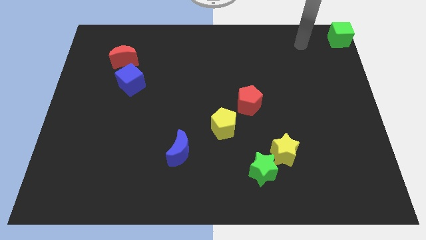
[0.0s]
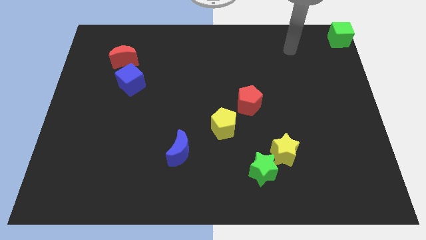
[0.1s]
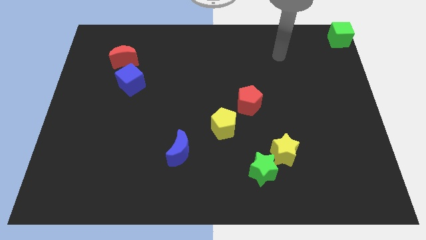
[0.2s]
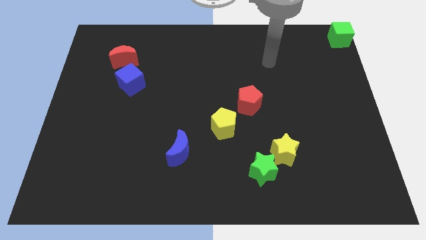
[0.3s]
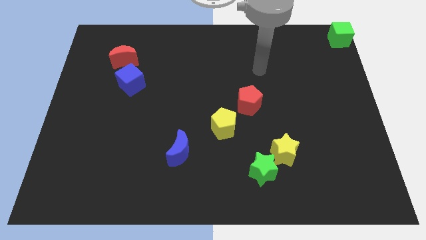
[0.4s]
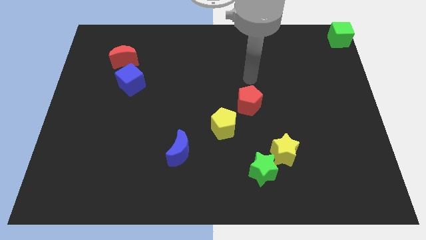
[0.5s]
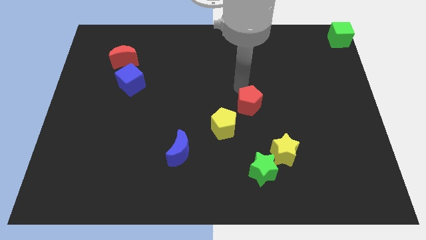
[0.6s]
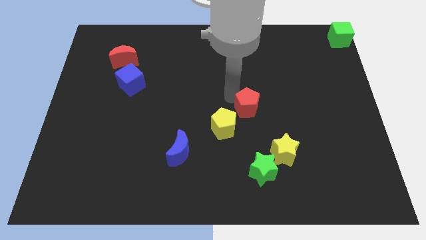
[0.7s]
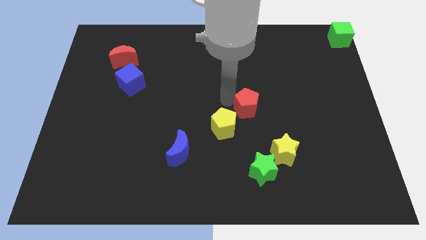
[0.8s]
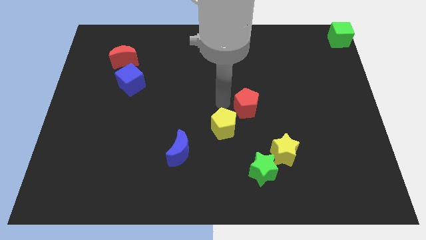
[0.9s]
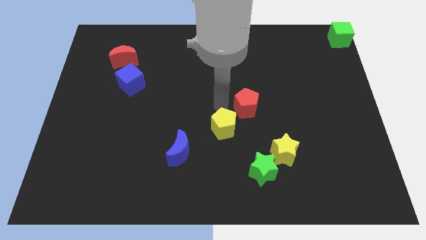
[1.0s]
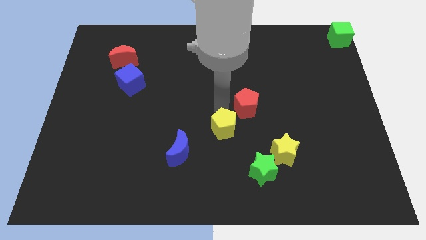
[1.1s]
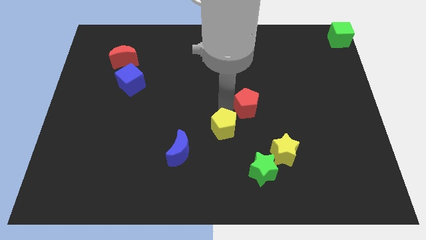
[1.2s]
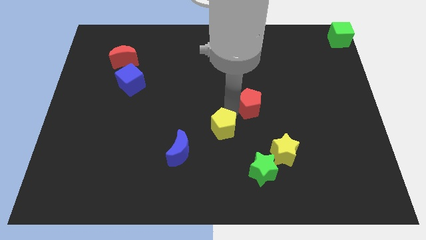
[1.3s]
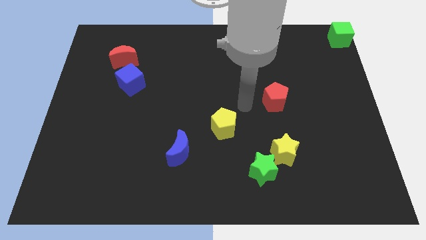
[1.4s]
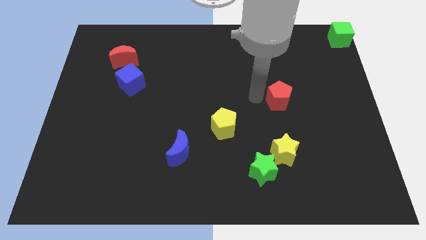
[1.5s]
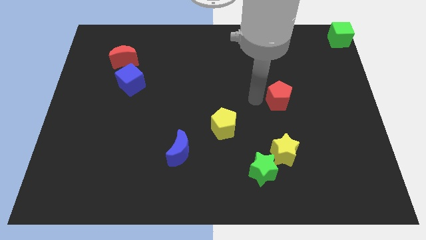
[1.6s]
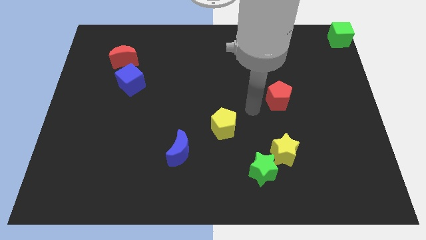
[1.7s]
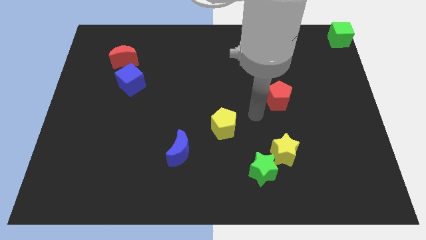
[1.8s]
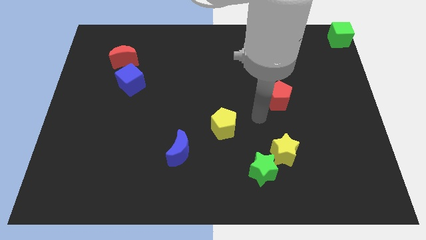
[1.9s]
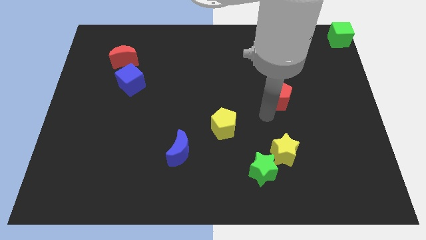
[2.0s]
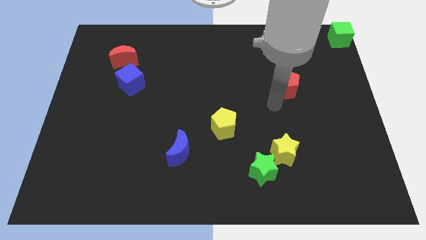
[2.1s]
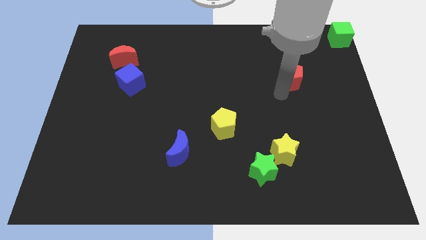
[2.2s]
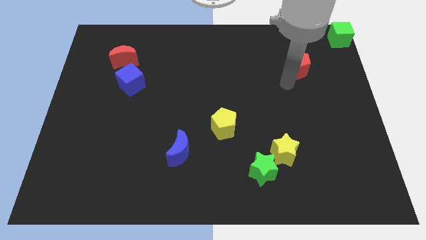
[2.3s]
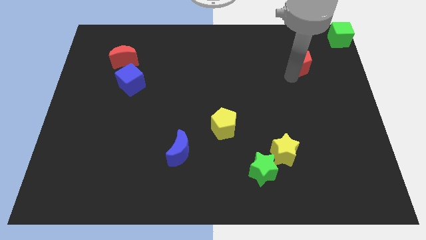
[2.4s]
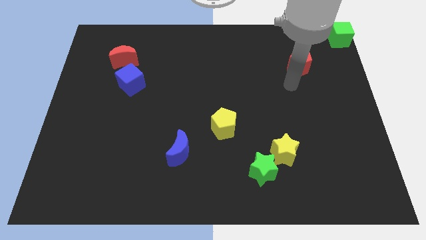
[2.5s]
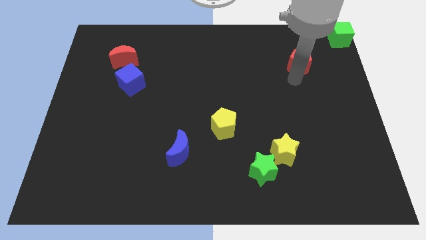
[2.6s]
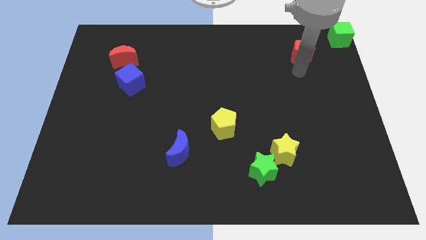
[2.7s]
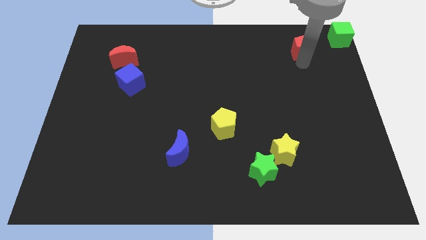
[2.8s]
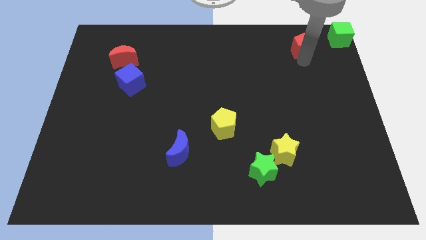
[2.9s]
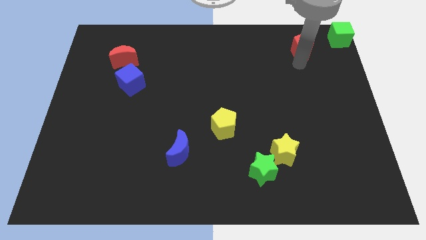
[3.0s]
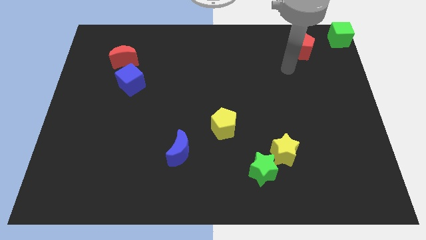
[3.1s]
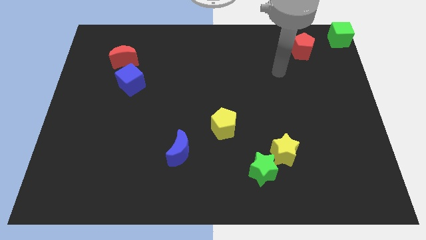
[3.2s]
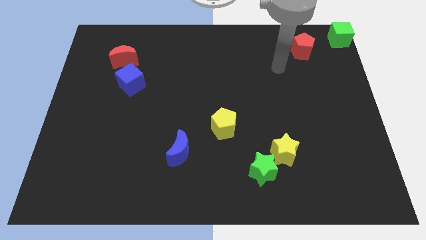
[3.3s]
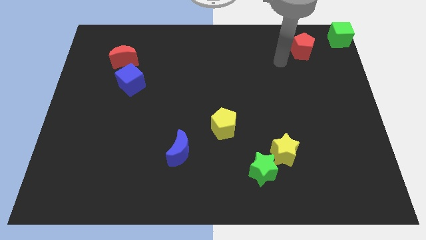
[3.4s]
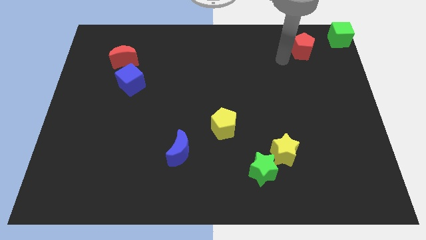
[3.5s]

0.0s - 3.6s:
place the red pentagon to the right of the red crescent

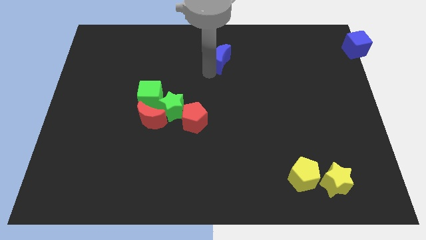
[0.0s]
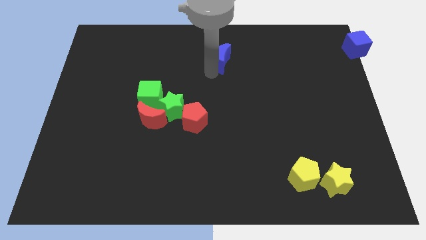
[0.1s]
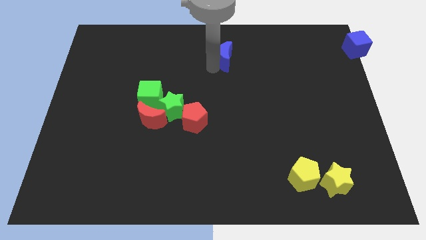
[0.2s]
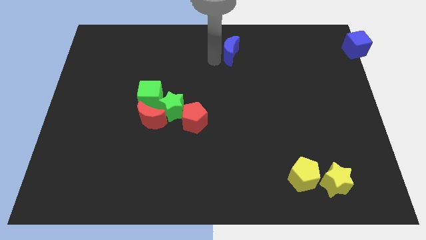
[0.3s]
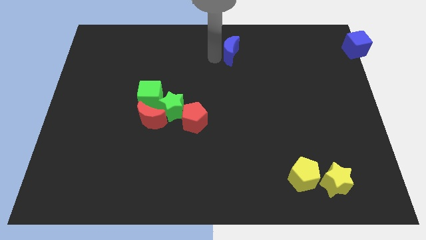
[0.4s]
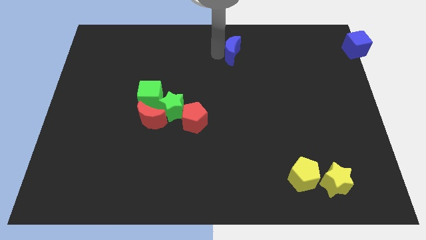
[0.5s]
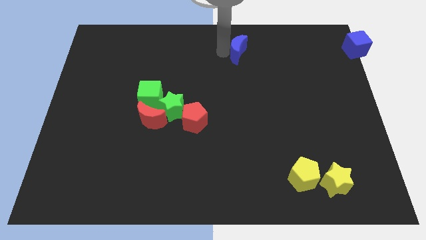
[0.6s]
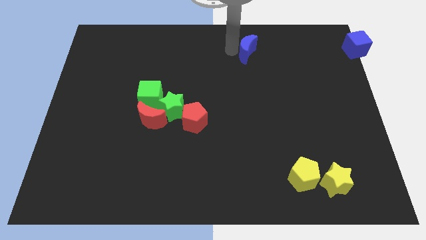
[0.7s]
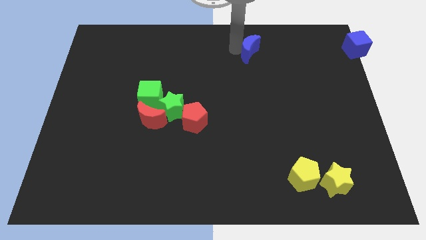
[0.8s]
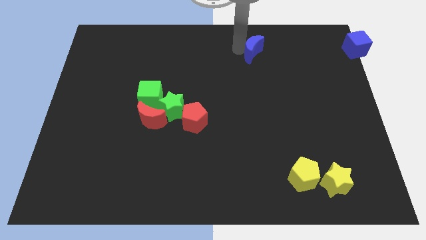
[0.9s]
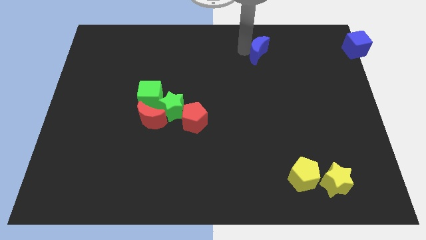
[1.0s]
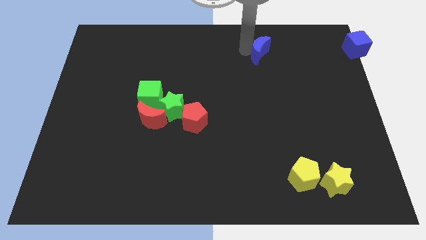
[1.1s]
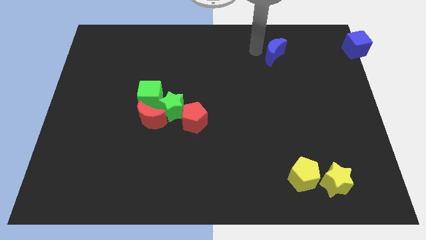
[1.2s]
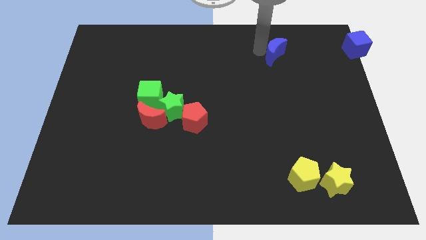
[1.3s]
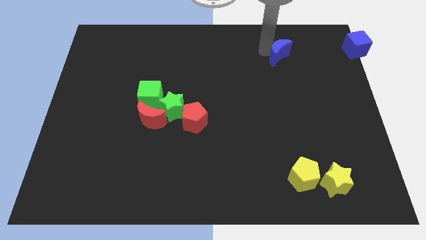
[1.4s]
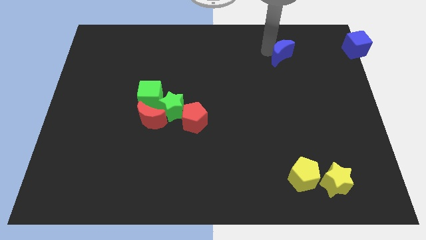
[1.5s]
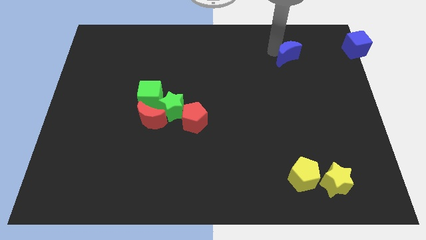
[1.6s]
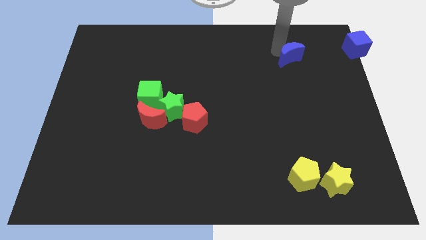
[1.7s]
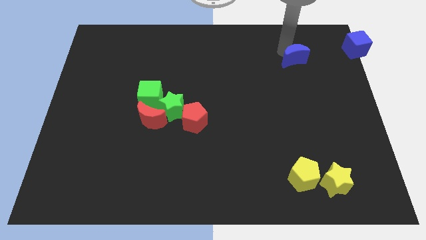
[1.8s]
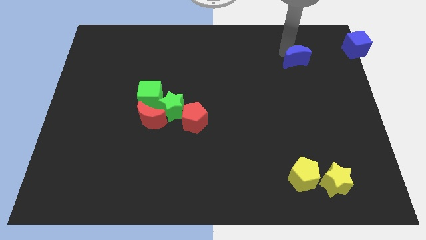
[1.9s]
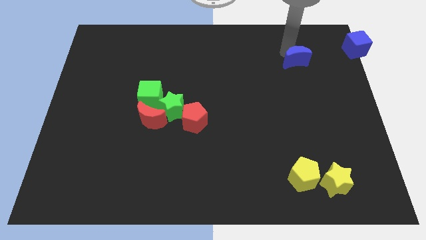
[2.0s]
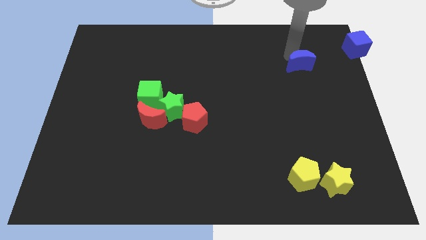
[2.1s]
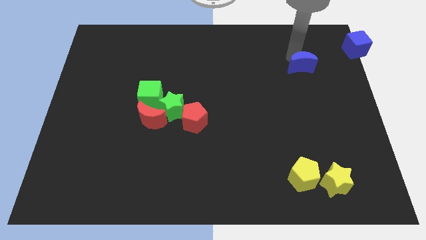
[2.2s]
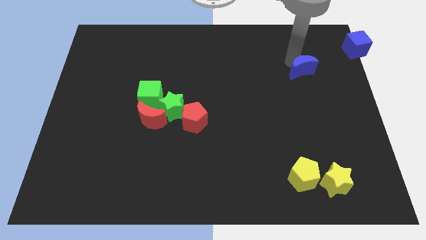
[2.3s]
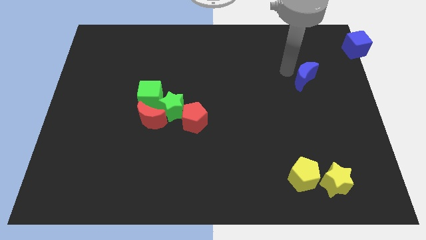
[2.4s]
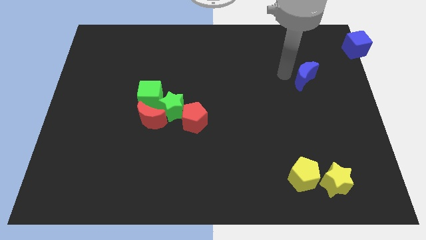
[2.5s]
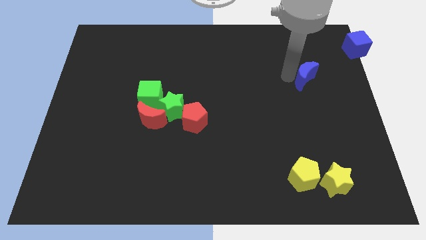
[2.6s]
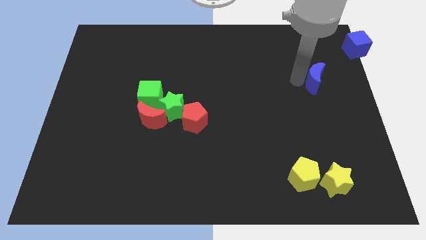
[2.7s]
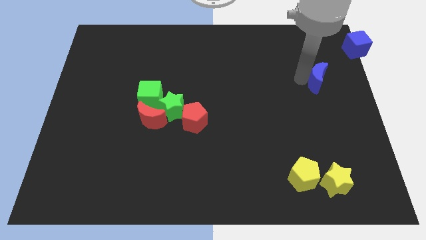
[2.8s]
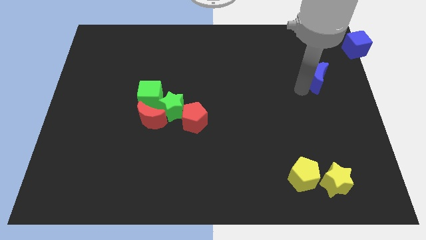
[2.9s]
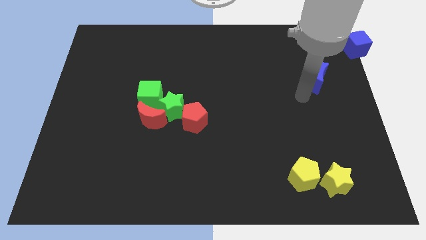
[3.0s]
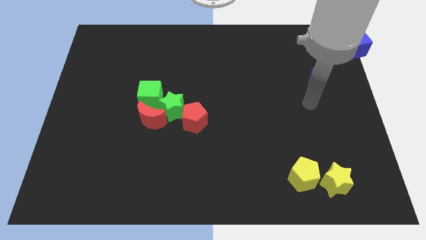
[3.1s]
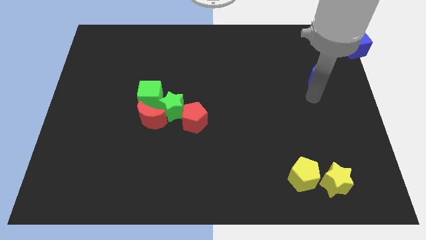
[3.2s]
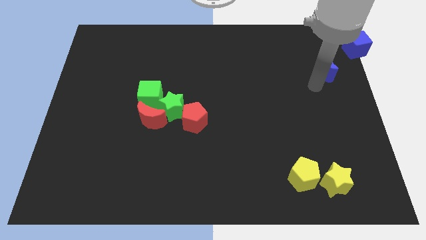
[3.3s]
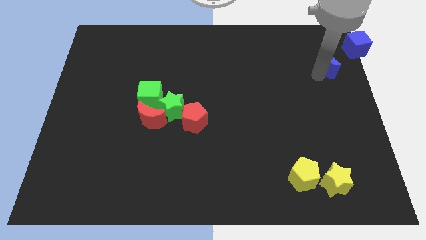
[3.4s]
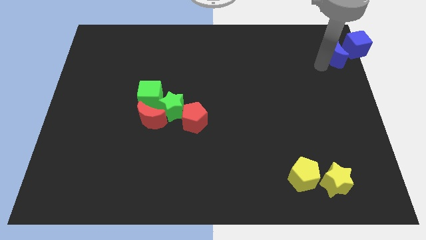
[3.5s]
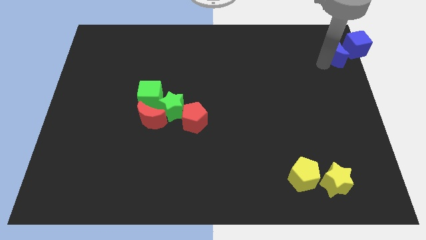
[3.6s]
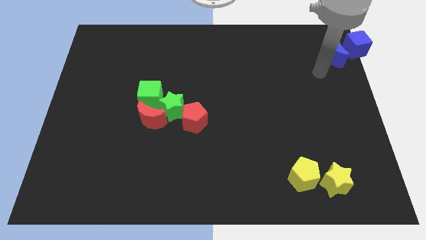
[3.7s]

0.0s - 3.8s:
move the blue moon close to the blue cube

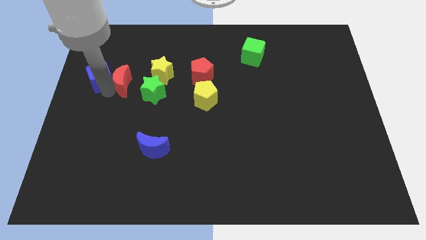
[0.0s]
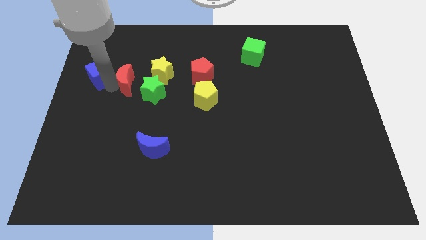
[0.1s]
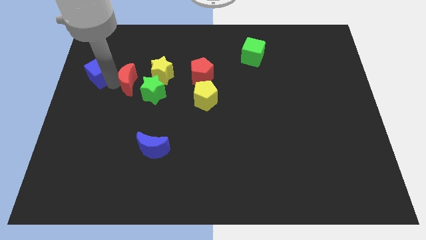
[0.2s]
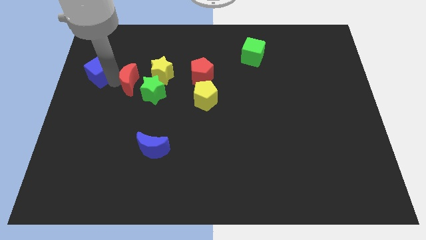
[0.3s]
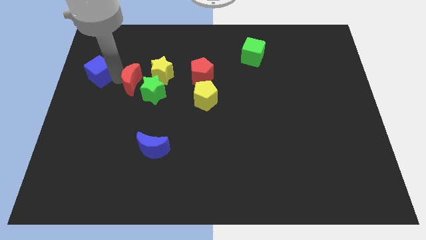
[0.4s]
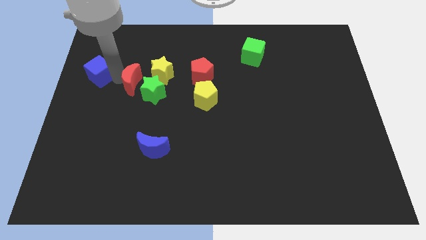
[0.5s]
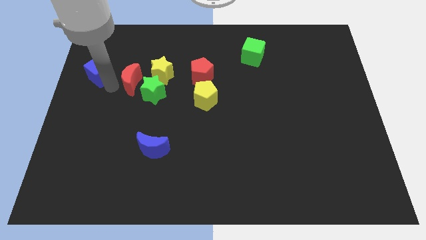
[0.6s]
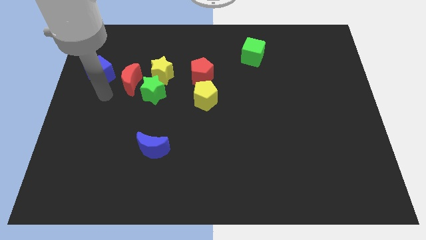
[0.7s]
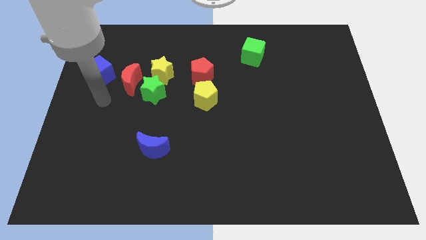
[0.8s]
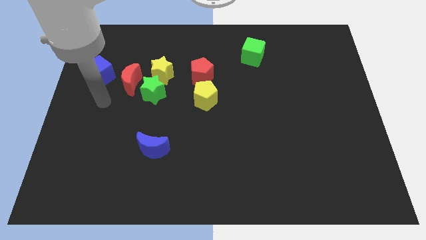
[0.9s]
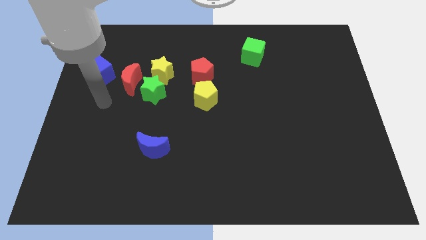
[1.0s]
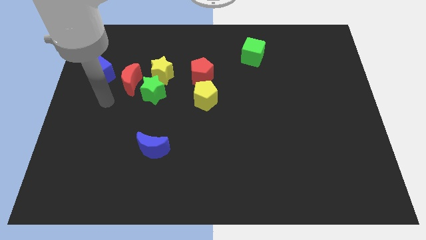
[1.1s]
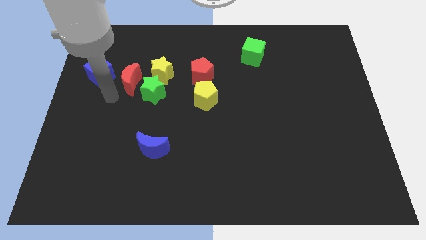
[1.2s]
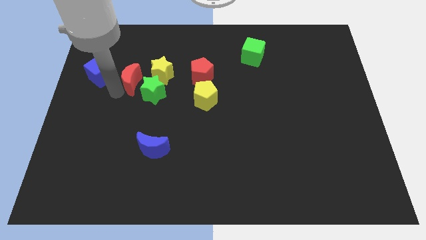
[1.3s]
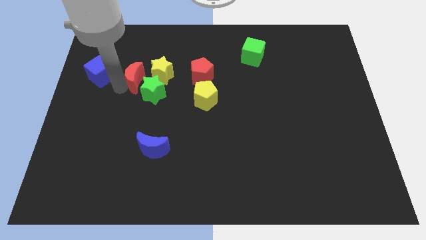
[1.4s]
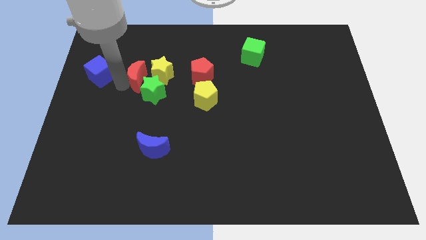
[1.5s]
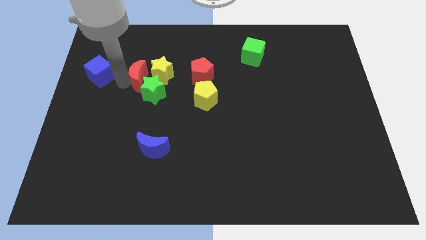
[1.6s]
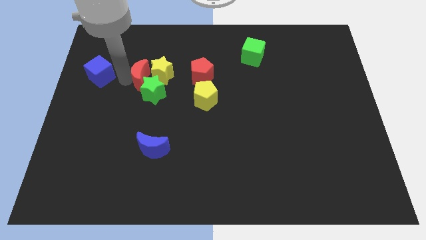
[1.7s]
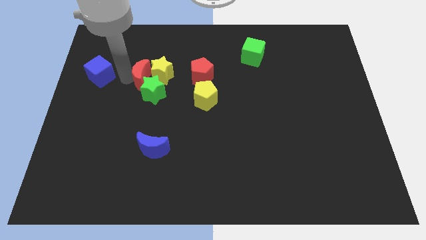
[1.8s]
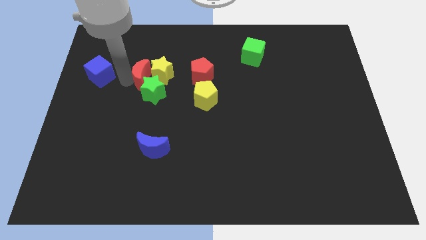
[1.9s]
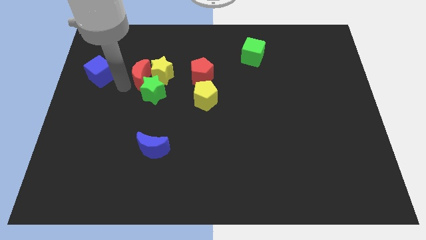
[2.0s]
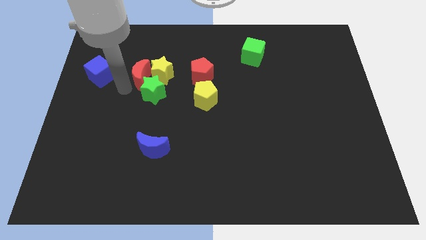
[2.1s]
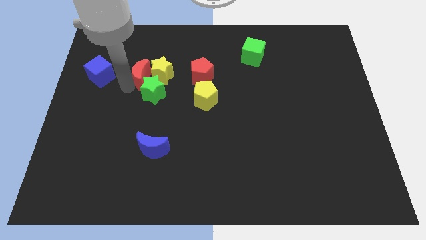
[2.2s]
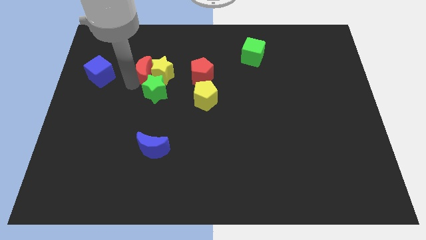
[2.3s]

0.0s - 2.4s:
push the red moon into the yellow and green stars to the left
